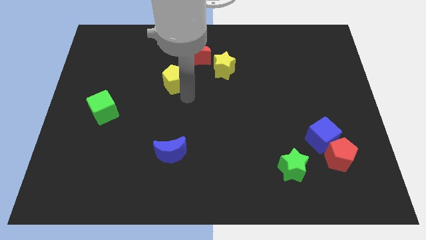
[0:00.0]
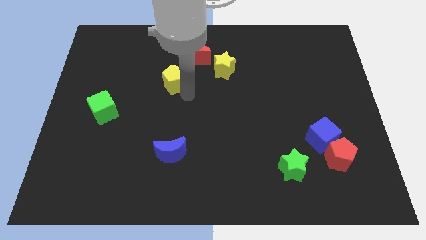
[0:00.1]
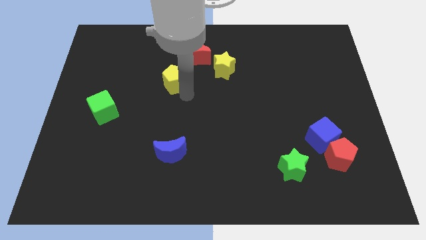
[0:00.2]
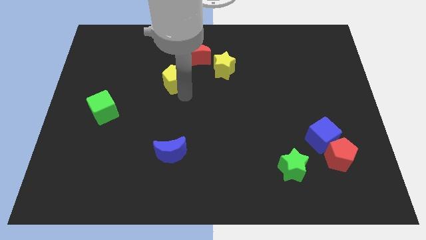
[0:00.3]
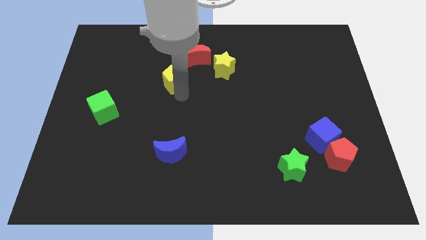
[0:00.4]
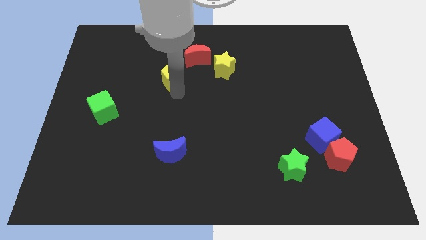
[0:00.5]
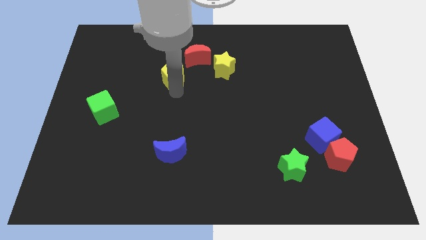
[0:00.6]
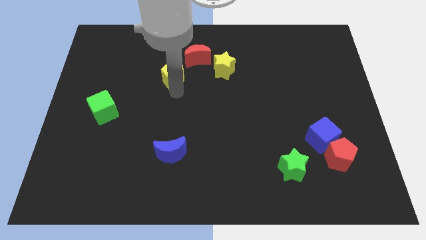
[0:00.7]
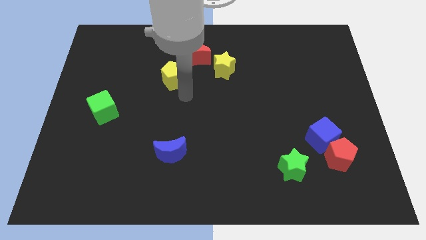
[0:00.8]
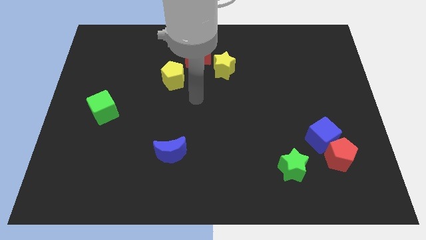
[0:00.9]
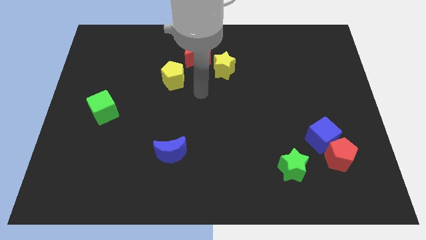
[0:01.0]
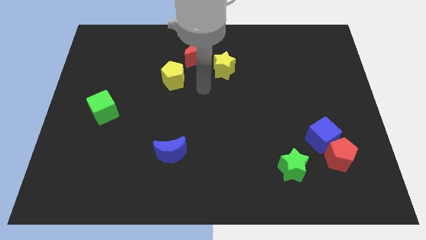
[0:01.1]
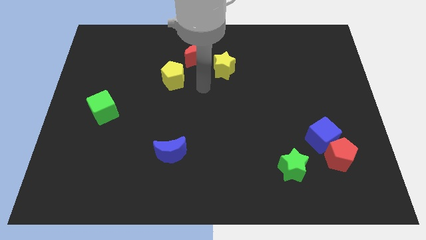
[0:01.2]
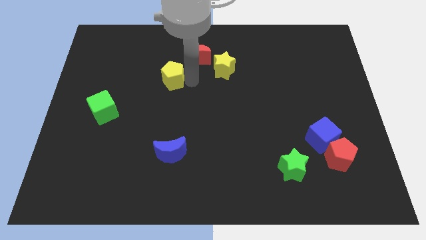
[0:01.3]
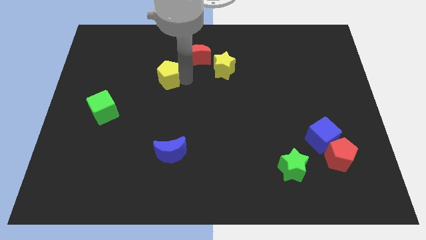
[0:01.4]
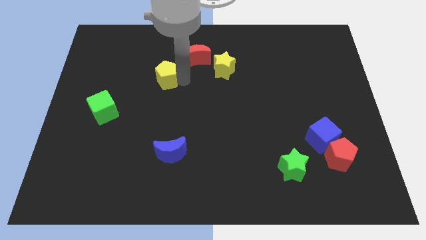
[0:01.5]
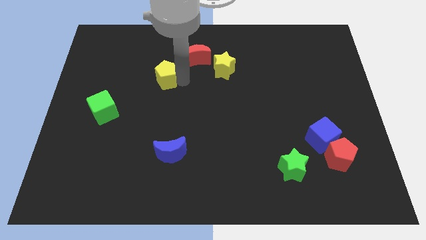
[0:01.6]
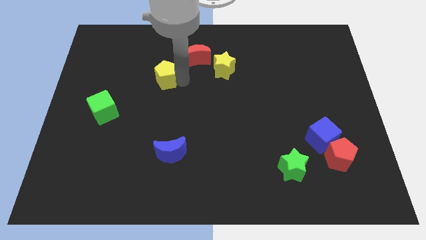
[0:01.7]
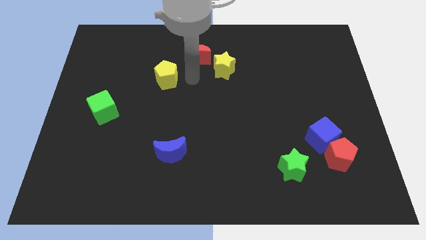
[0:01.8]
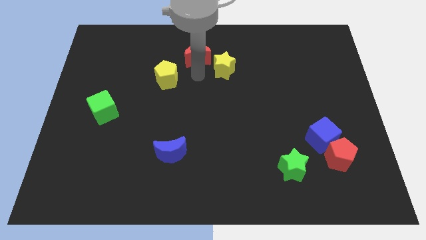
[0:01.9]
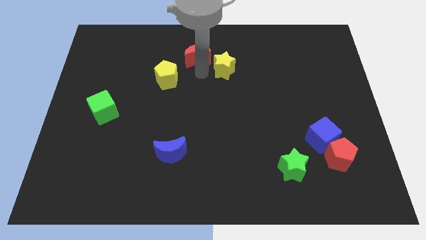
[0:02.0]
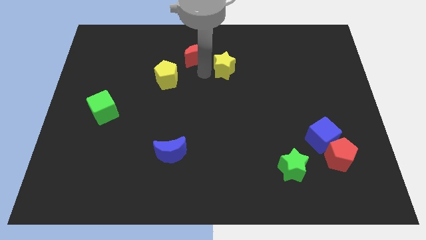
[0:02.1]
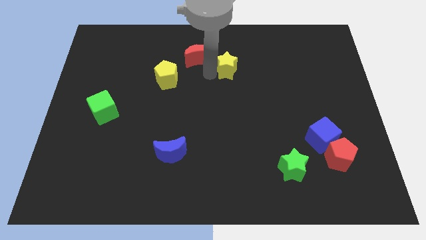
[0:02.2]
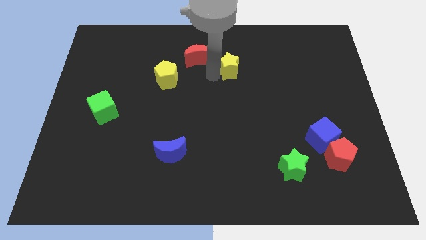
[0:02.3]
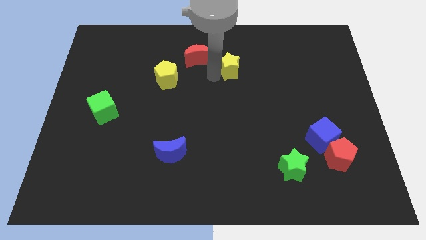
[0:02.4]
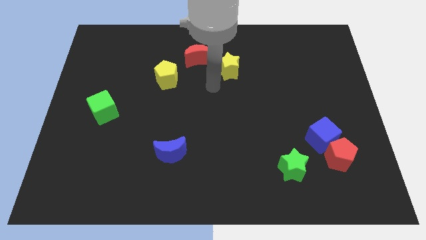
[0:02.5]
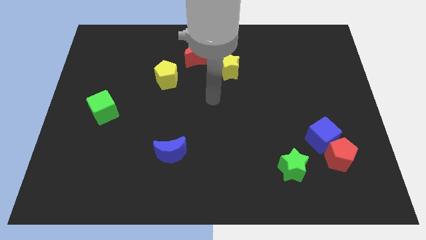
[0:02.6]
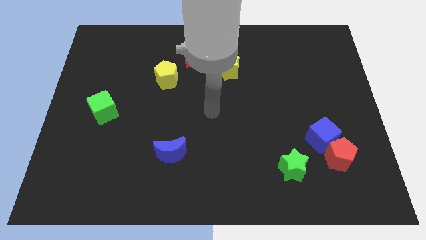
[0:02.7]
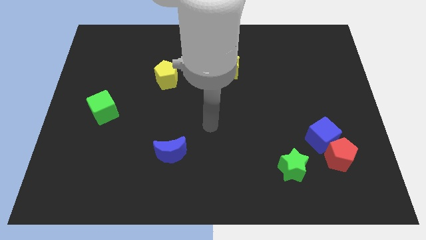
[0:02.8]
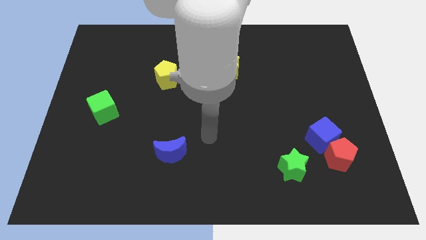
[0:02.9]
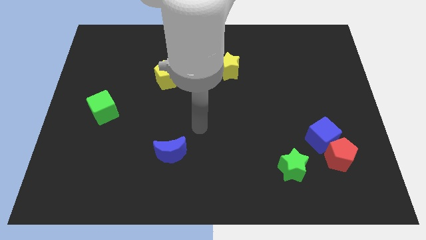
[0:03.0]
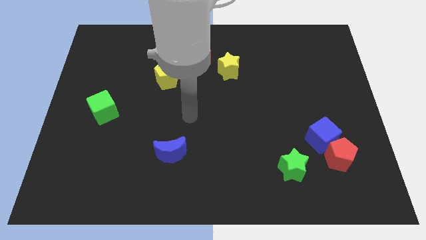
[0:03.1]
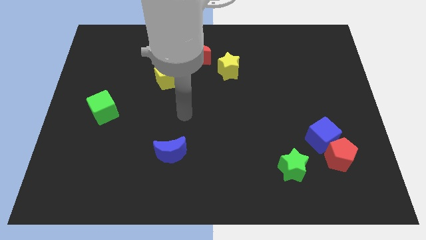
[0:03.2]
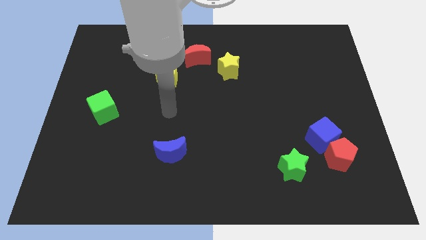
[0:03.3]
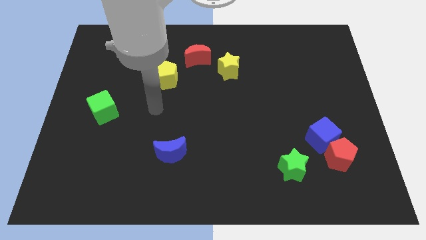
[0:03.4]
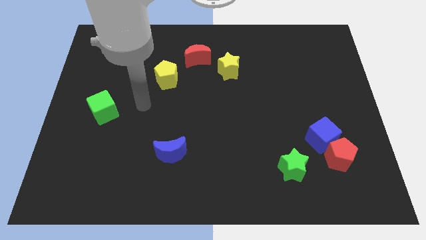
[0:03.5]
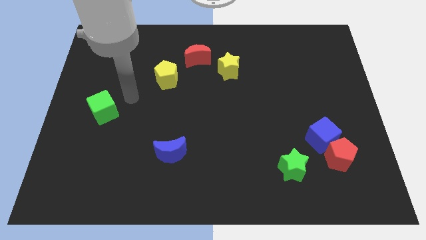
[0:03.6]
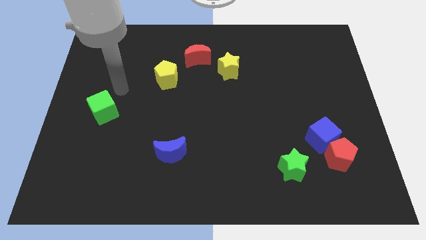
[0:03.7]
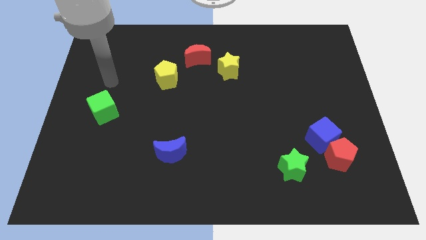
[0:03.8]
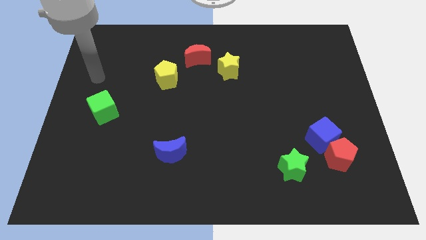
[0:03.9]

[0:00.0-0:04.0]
move the yellow pentagon slightly to the bottom left of the red crescent

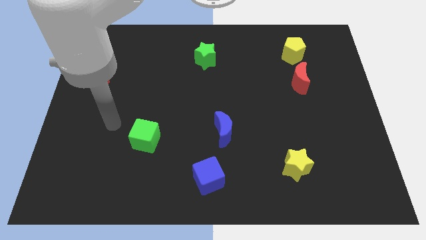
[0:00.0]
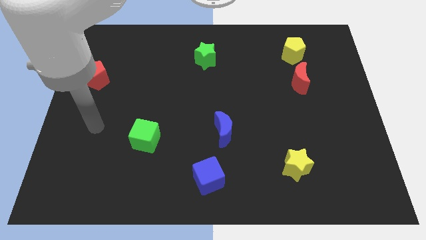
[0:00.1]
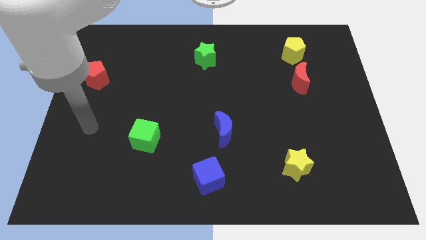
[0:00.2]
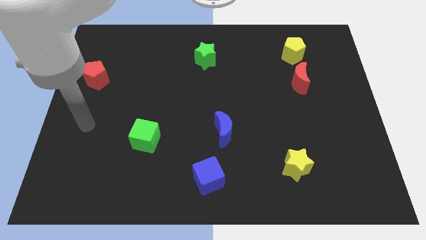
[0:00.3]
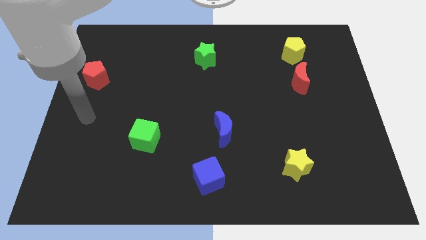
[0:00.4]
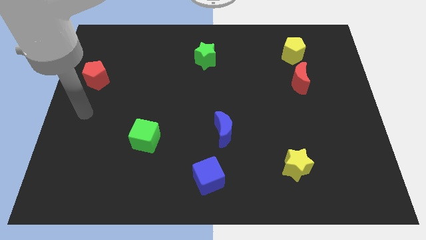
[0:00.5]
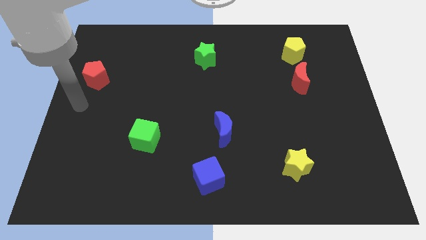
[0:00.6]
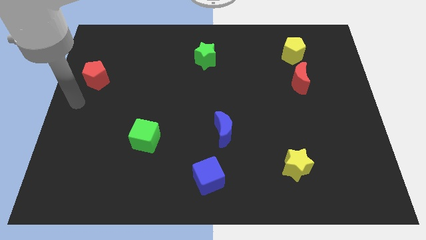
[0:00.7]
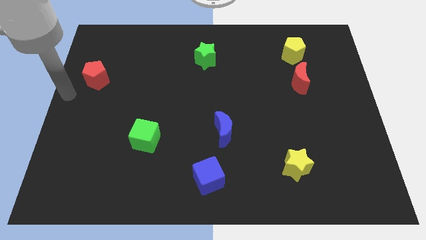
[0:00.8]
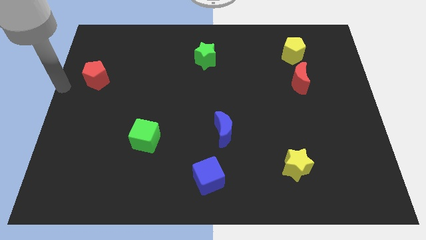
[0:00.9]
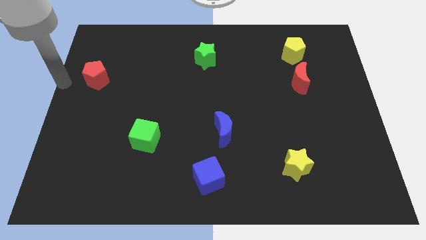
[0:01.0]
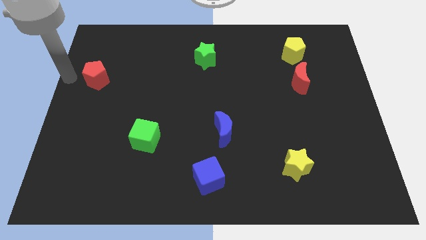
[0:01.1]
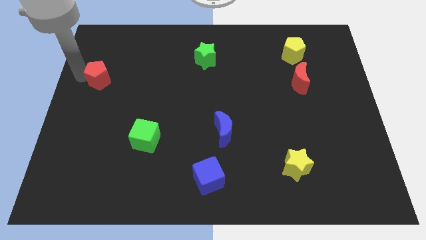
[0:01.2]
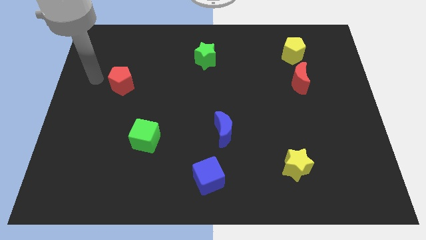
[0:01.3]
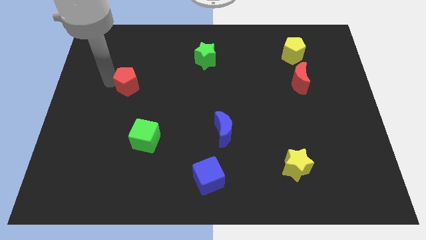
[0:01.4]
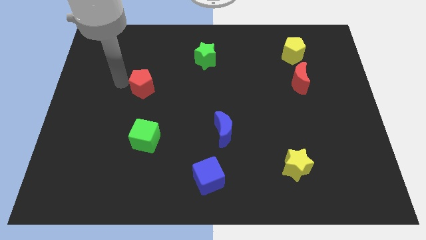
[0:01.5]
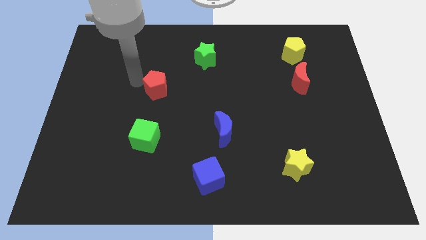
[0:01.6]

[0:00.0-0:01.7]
push the red pentagon to the top side of the green cube

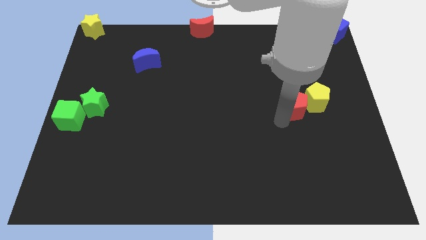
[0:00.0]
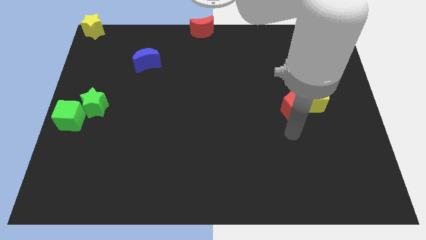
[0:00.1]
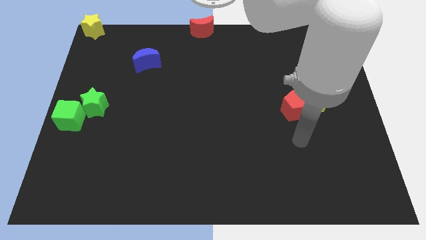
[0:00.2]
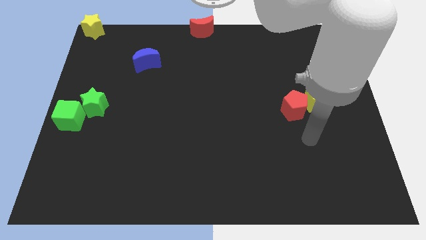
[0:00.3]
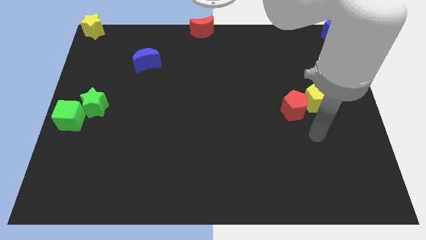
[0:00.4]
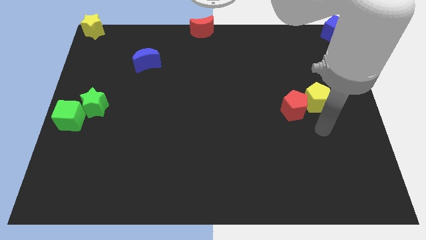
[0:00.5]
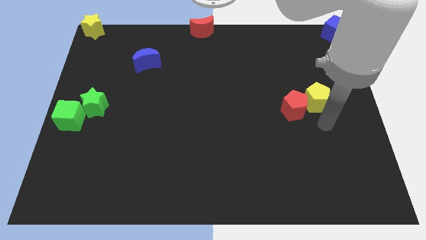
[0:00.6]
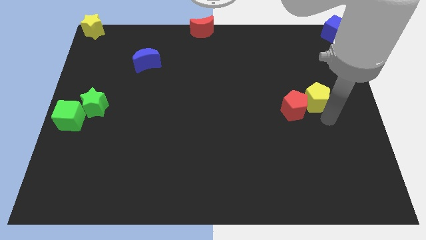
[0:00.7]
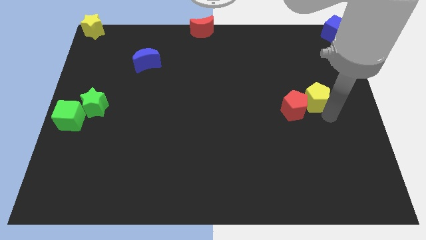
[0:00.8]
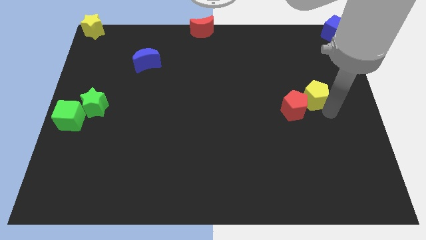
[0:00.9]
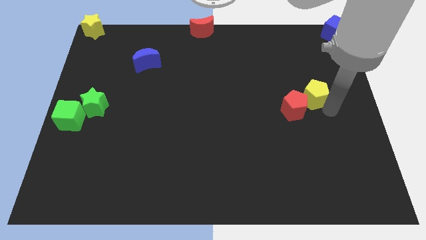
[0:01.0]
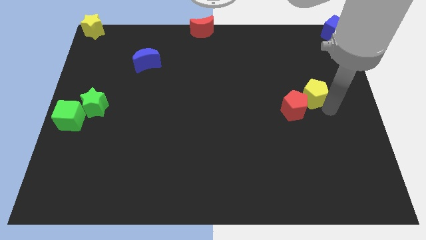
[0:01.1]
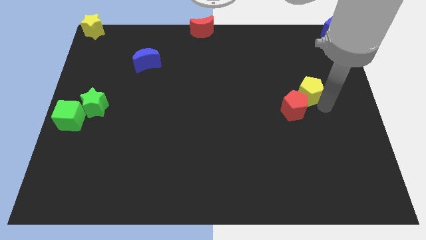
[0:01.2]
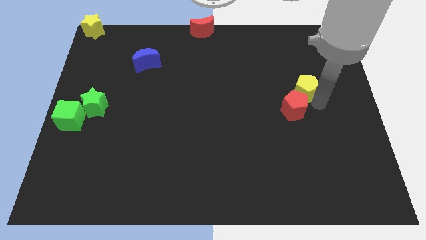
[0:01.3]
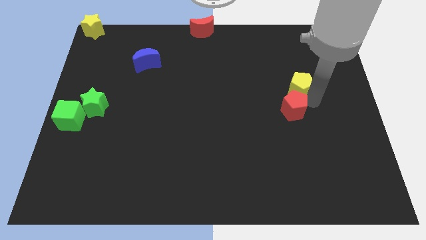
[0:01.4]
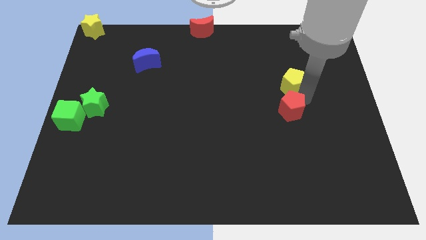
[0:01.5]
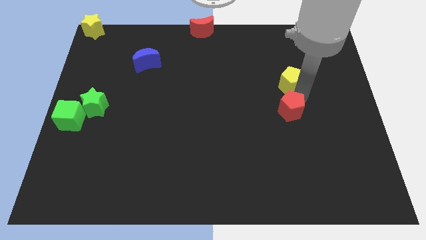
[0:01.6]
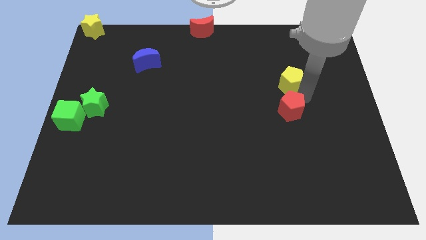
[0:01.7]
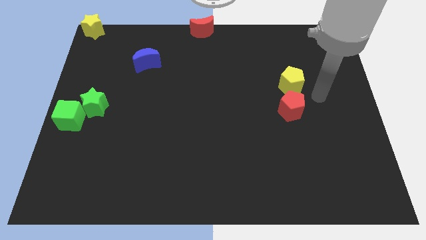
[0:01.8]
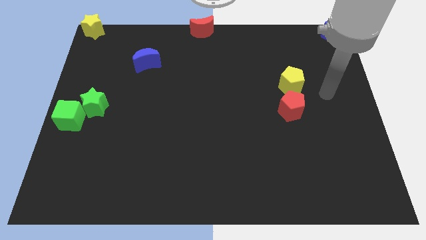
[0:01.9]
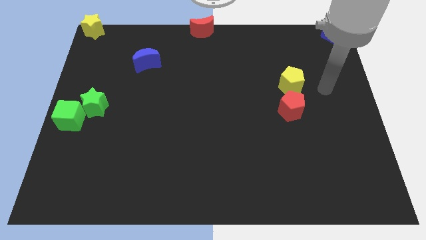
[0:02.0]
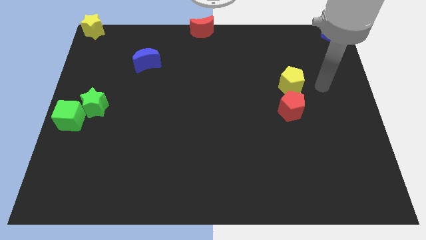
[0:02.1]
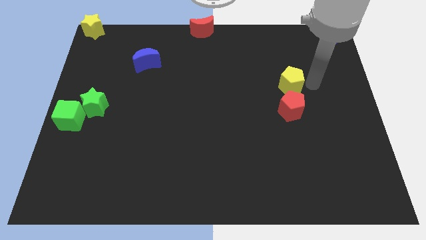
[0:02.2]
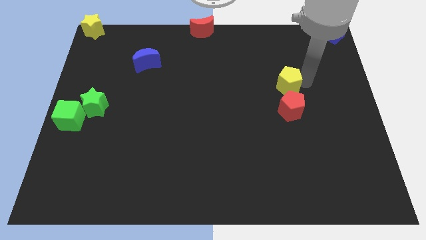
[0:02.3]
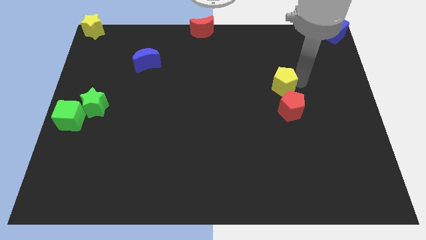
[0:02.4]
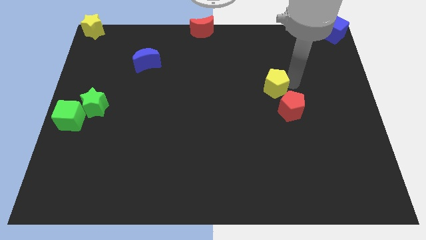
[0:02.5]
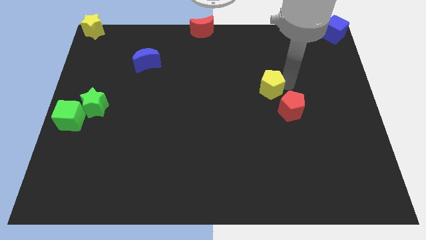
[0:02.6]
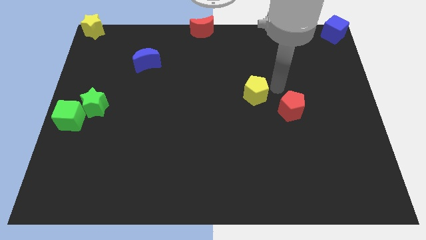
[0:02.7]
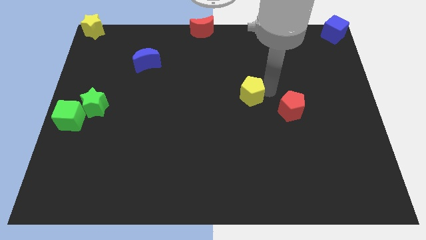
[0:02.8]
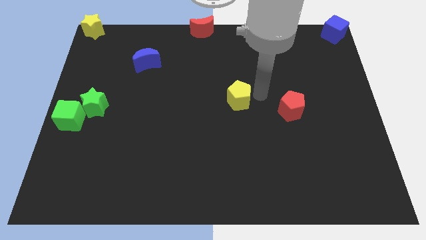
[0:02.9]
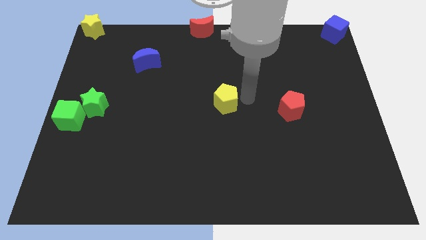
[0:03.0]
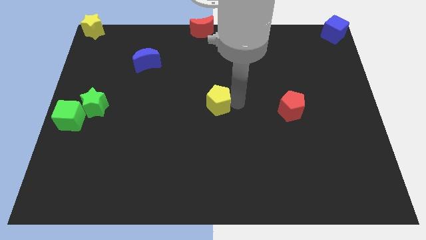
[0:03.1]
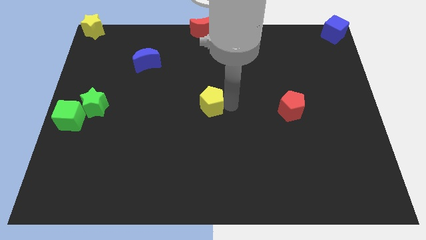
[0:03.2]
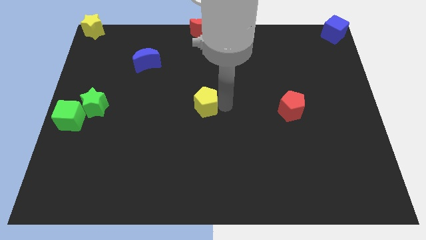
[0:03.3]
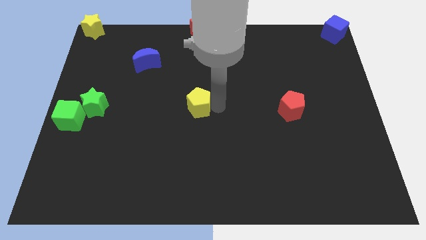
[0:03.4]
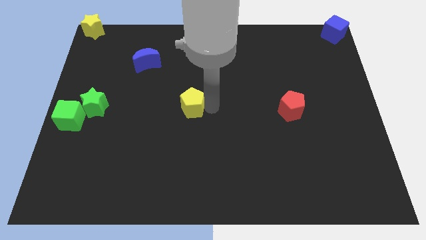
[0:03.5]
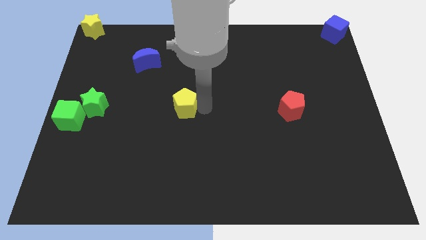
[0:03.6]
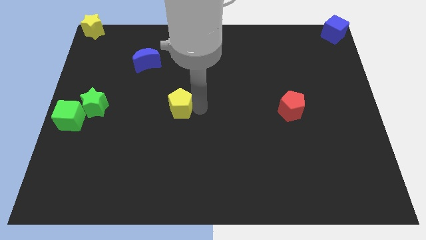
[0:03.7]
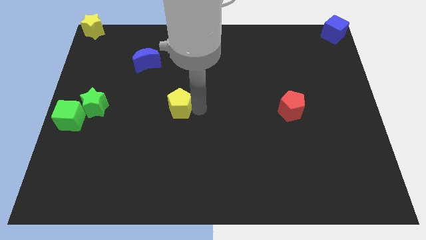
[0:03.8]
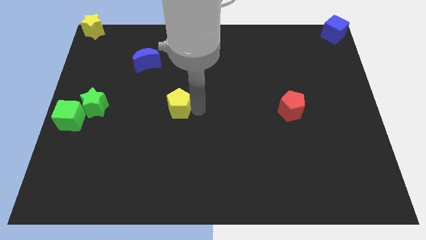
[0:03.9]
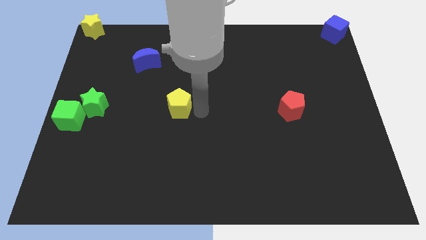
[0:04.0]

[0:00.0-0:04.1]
place the yellow pentagon diagonally to the blue moon
